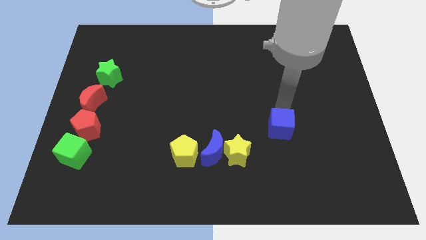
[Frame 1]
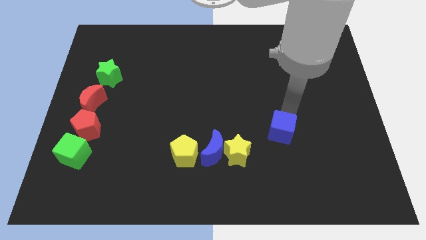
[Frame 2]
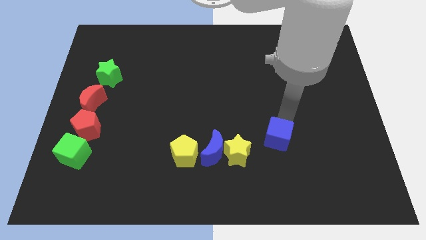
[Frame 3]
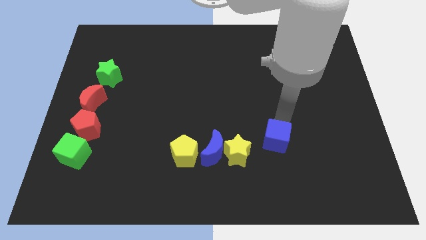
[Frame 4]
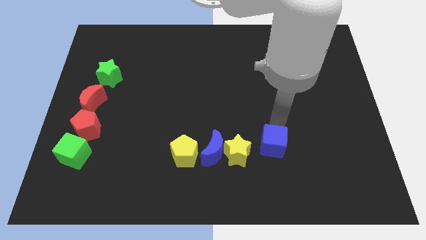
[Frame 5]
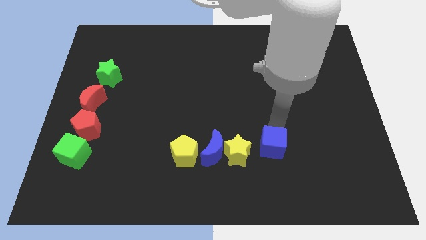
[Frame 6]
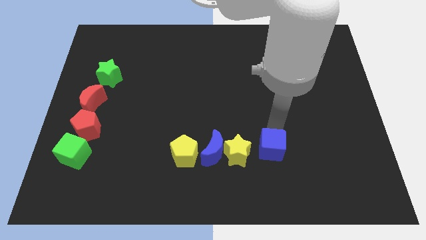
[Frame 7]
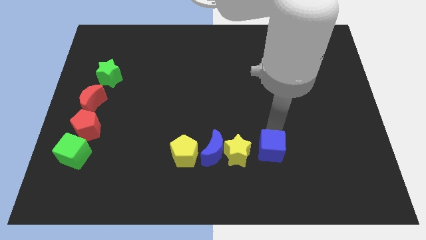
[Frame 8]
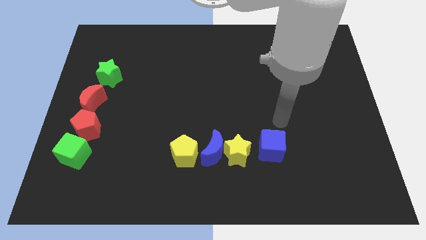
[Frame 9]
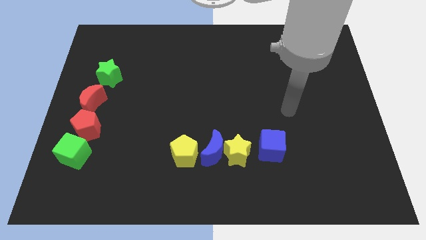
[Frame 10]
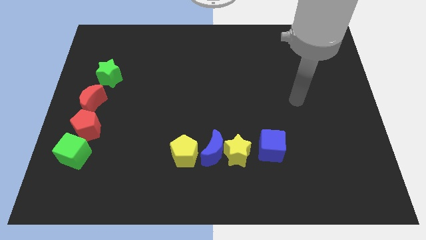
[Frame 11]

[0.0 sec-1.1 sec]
place the blue cube to the right side of the yellow star

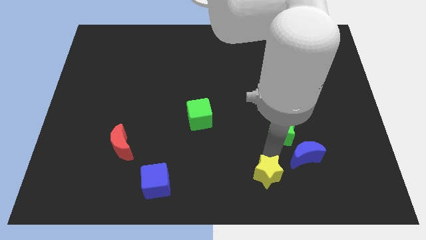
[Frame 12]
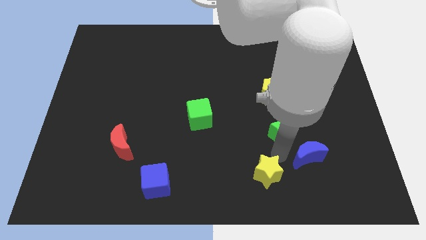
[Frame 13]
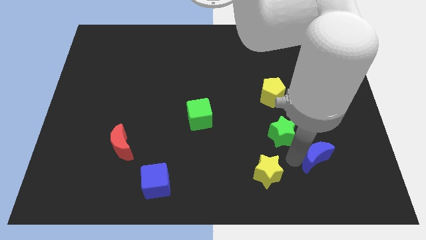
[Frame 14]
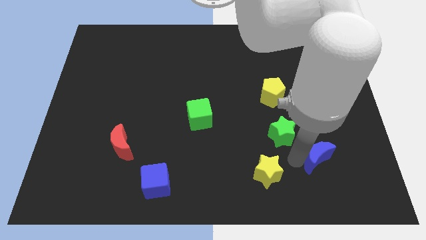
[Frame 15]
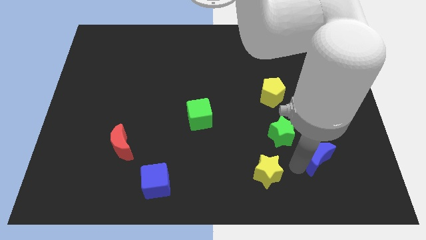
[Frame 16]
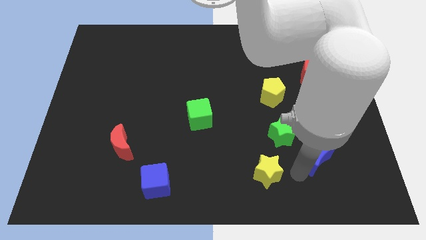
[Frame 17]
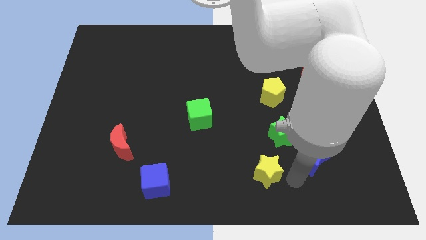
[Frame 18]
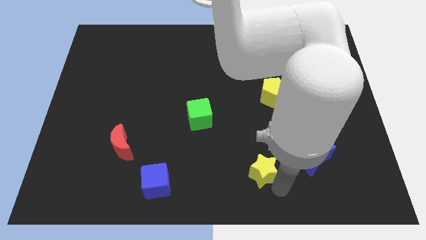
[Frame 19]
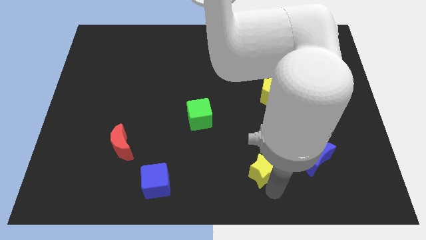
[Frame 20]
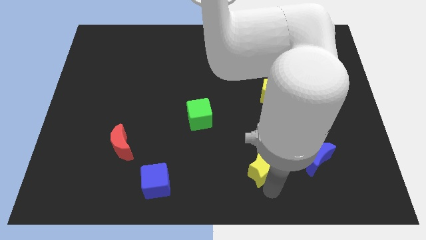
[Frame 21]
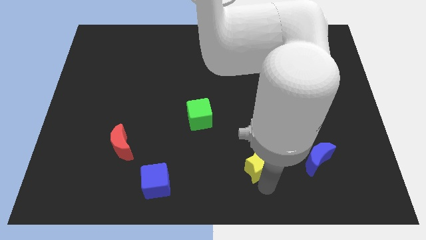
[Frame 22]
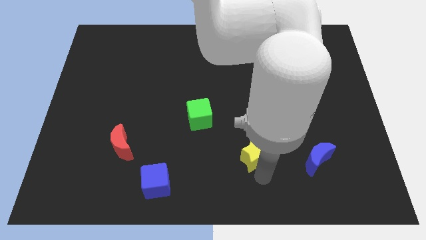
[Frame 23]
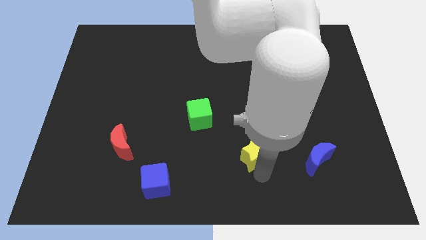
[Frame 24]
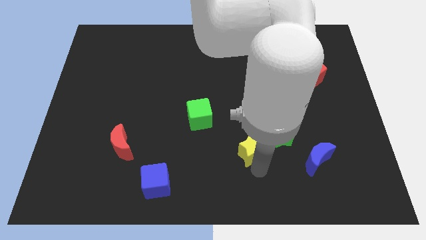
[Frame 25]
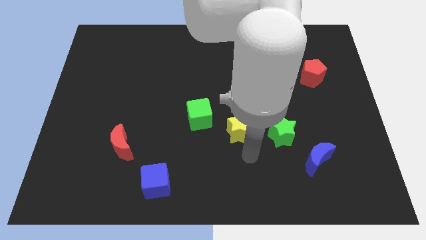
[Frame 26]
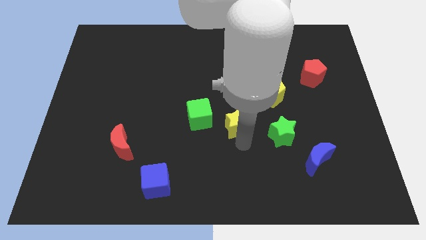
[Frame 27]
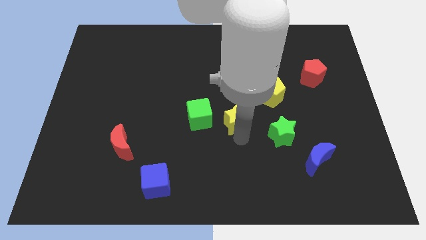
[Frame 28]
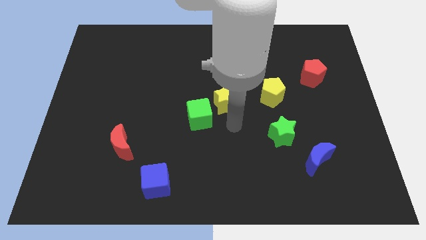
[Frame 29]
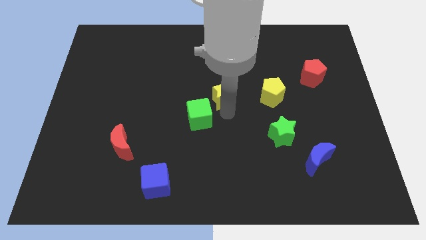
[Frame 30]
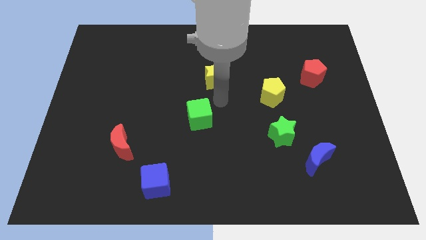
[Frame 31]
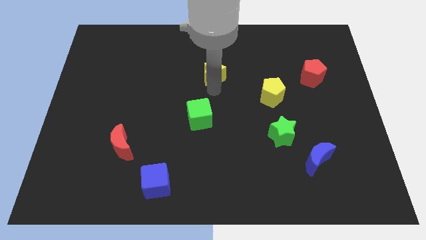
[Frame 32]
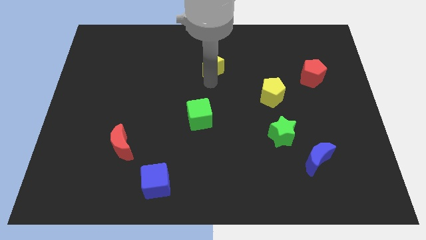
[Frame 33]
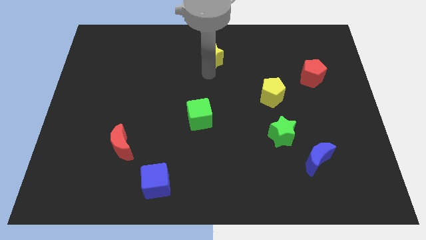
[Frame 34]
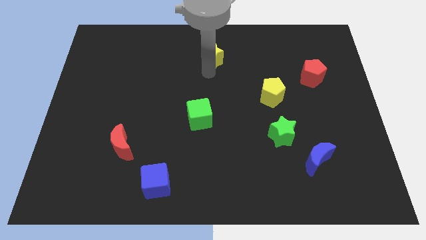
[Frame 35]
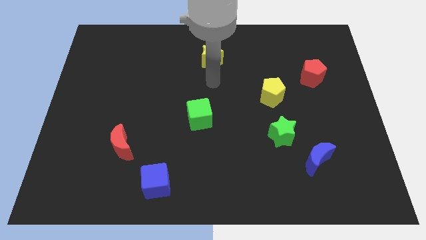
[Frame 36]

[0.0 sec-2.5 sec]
push the yellow star to the top center

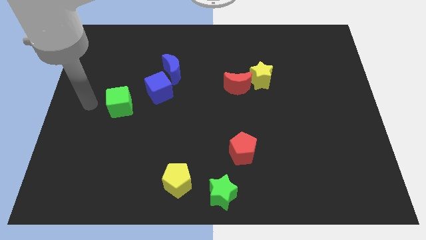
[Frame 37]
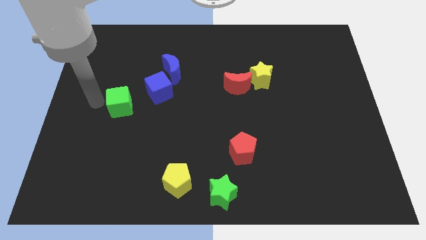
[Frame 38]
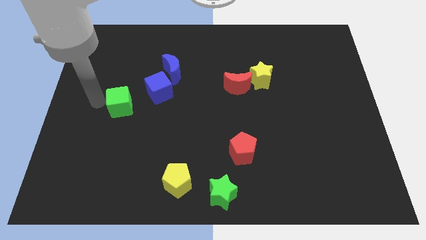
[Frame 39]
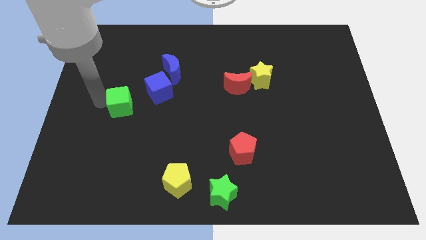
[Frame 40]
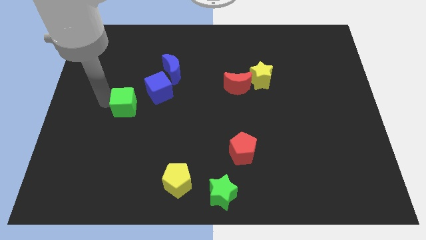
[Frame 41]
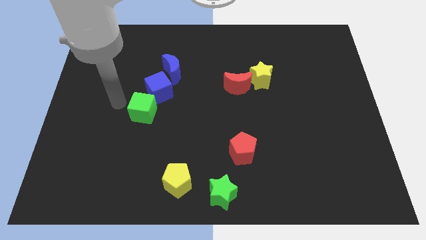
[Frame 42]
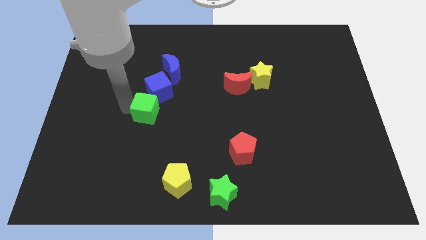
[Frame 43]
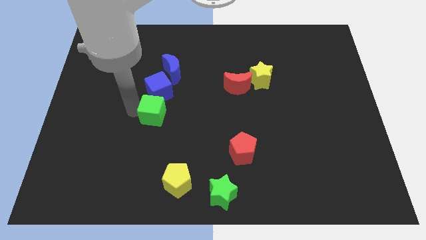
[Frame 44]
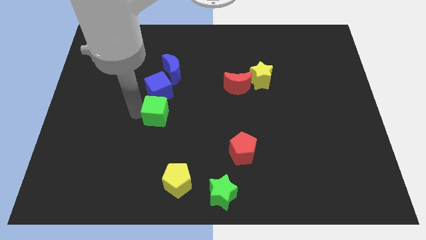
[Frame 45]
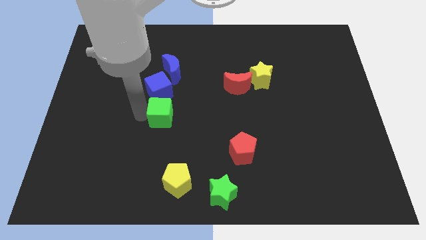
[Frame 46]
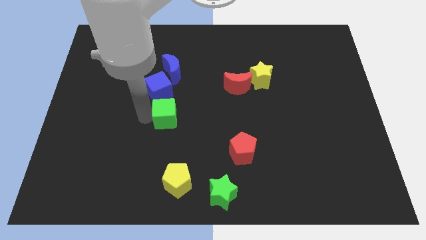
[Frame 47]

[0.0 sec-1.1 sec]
push the green cube to the bottom of the blue cube

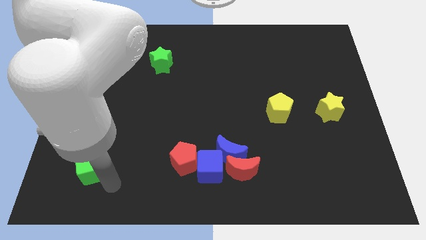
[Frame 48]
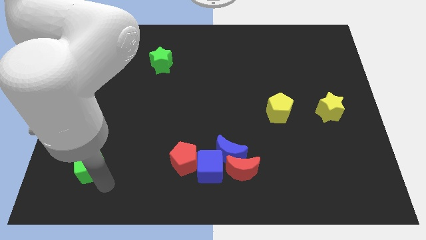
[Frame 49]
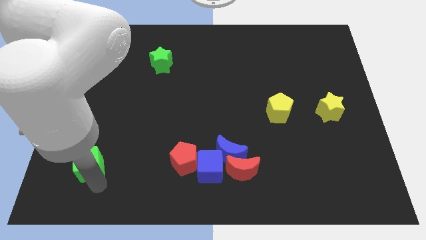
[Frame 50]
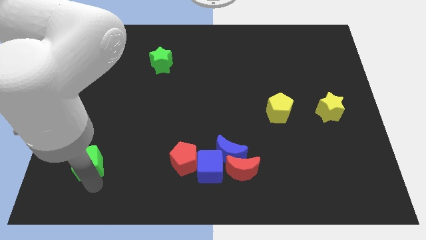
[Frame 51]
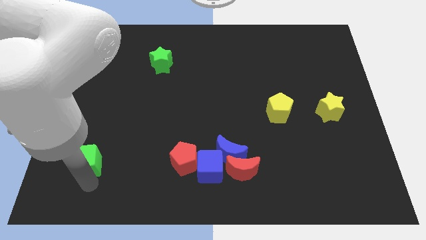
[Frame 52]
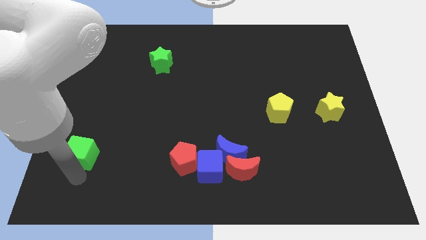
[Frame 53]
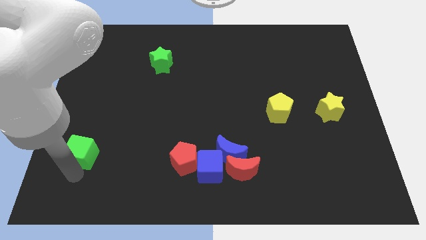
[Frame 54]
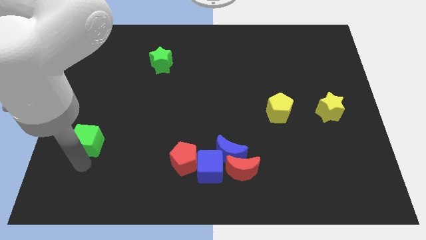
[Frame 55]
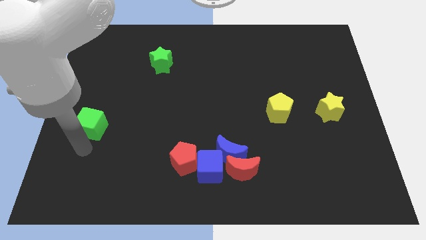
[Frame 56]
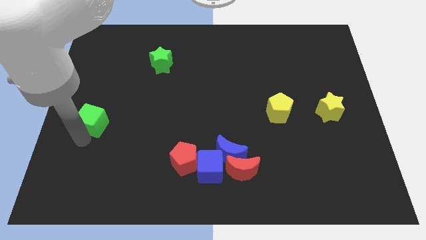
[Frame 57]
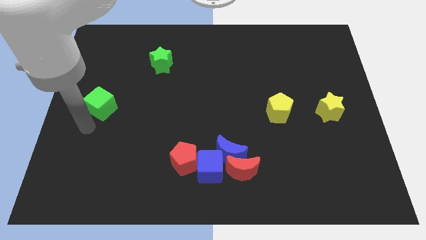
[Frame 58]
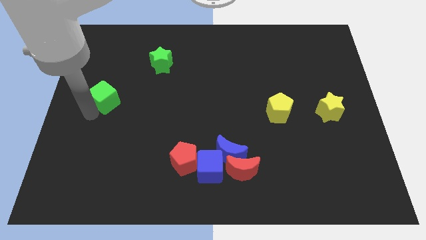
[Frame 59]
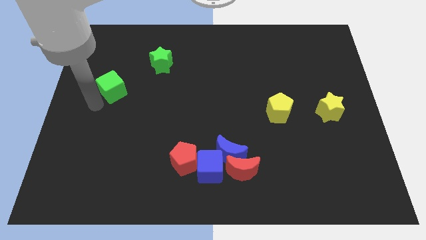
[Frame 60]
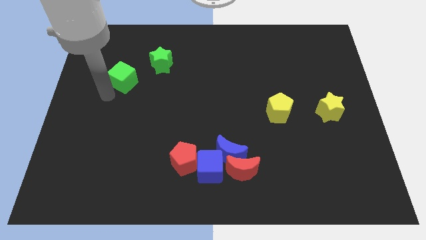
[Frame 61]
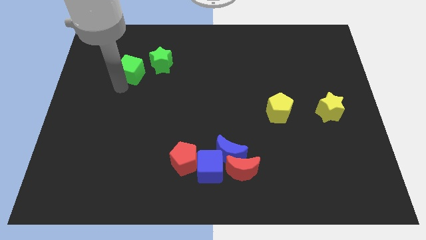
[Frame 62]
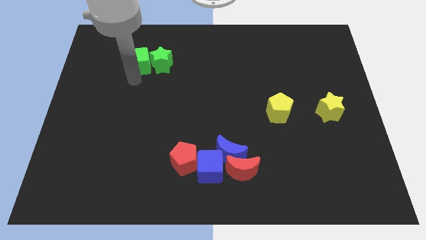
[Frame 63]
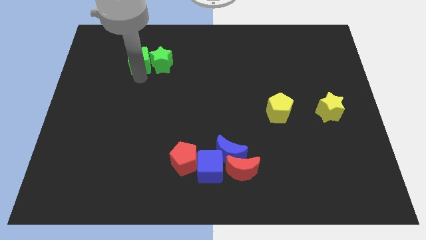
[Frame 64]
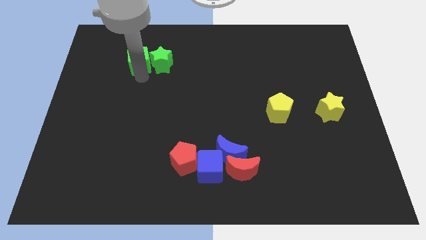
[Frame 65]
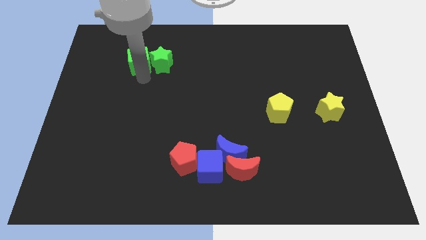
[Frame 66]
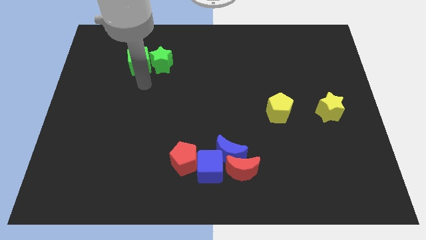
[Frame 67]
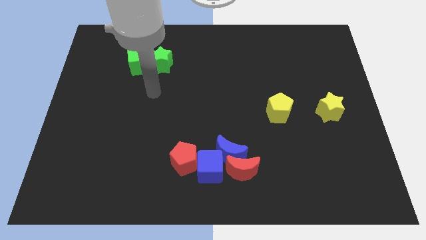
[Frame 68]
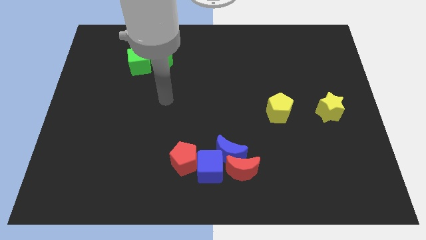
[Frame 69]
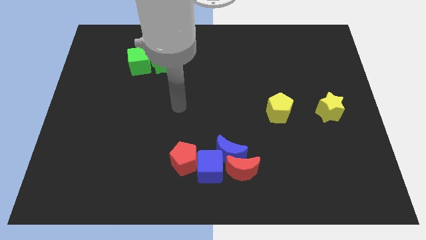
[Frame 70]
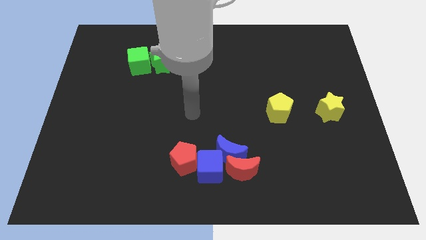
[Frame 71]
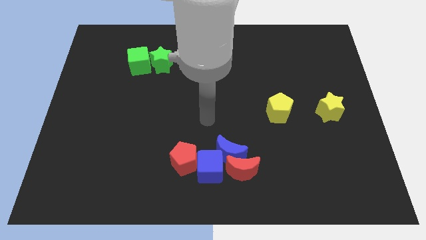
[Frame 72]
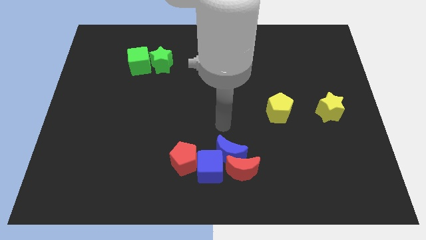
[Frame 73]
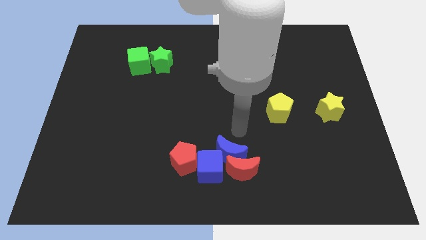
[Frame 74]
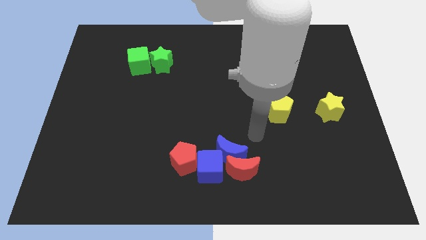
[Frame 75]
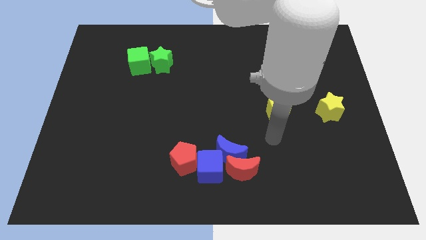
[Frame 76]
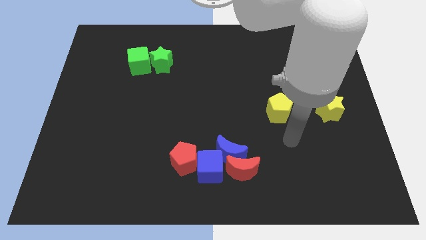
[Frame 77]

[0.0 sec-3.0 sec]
put the green cube to the left of the green star

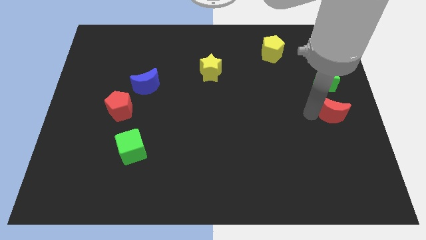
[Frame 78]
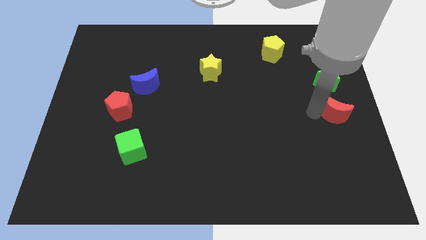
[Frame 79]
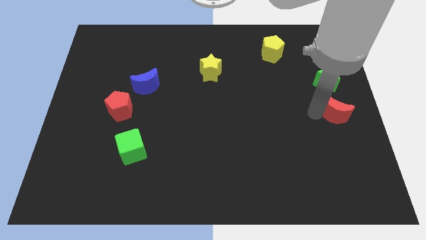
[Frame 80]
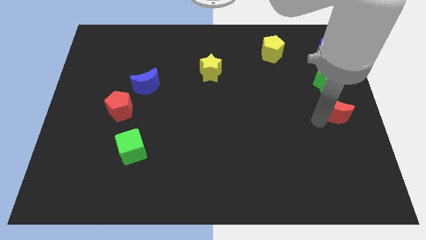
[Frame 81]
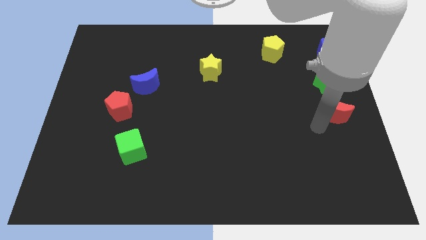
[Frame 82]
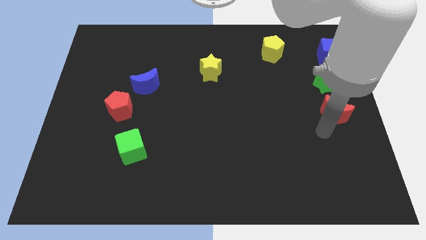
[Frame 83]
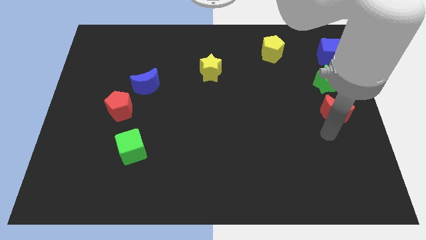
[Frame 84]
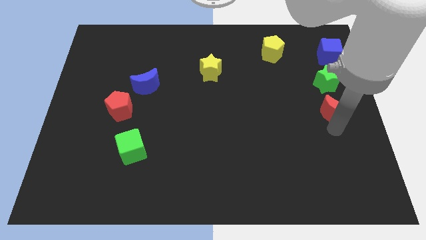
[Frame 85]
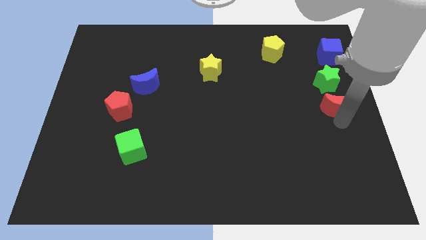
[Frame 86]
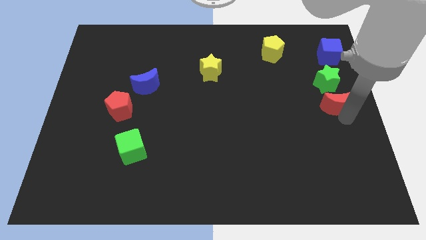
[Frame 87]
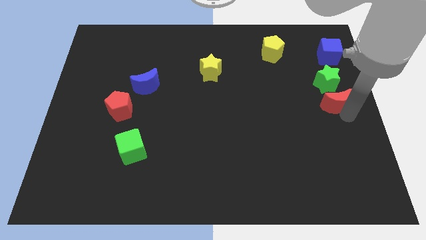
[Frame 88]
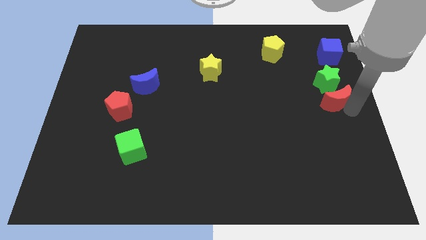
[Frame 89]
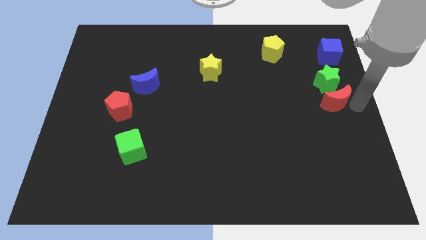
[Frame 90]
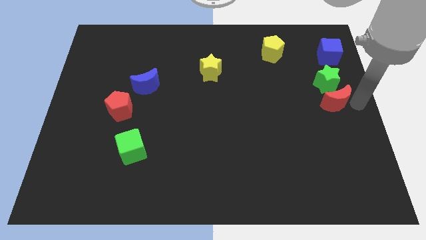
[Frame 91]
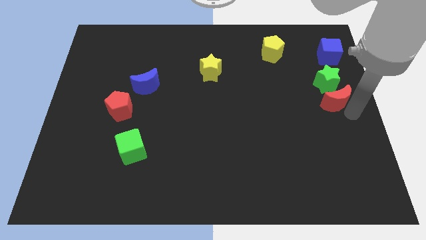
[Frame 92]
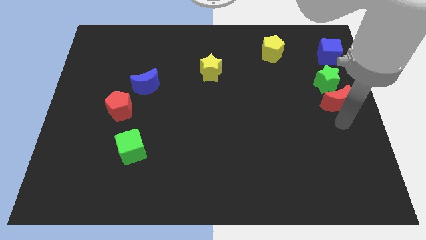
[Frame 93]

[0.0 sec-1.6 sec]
push the red moon towards the green star
